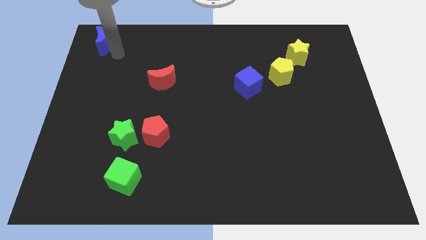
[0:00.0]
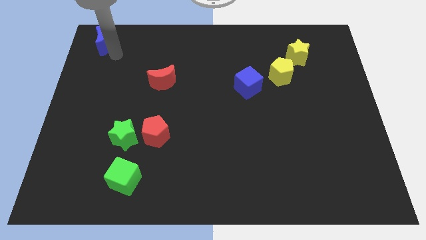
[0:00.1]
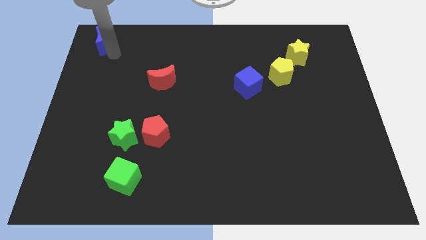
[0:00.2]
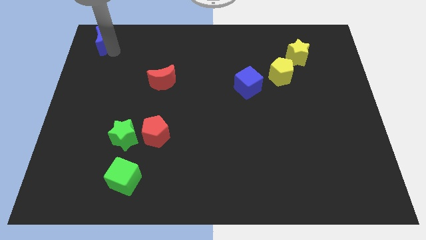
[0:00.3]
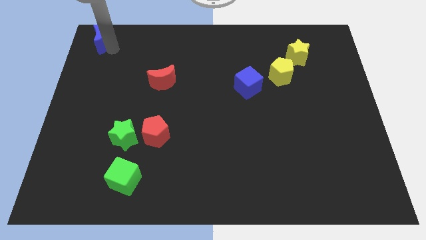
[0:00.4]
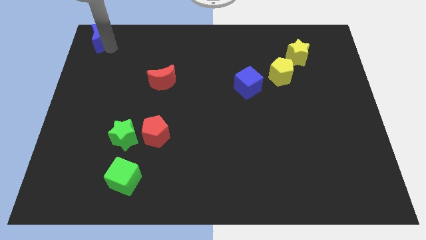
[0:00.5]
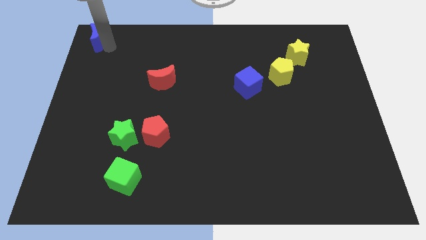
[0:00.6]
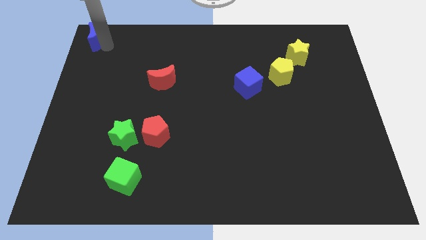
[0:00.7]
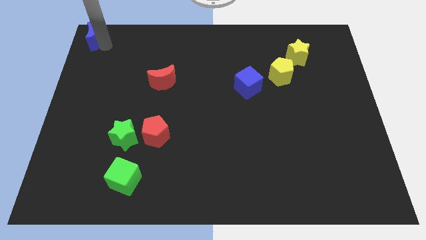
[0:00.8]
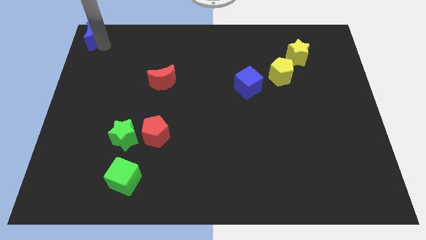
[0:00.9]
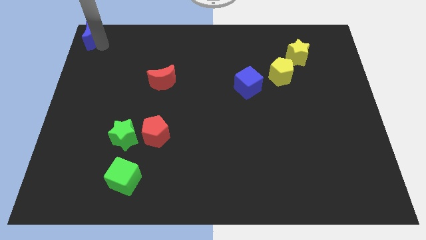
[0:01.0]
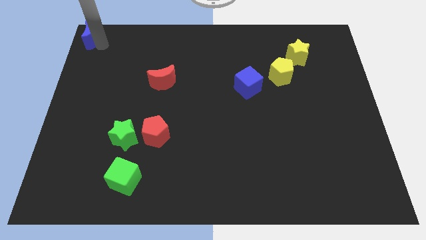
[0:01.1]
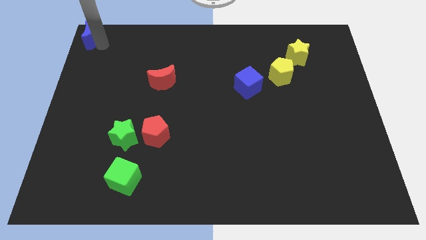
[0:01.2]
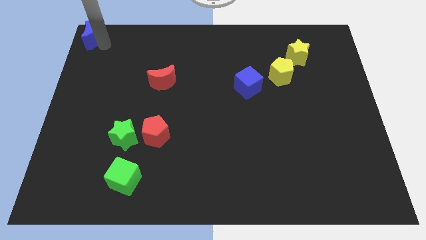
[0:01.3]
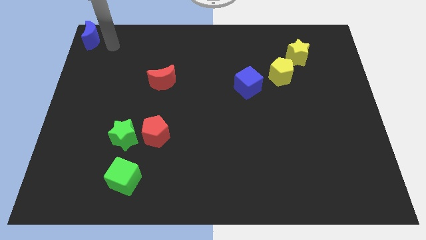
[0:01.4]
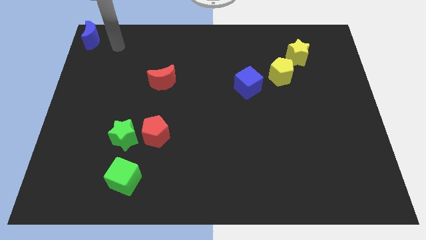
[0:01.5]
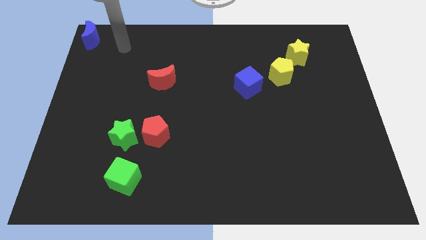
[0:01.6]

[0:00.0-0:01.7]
put the blue crescent to the top left corner of the board

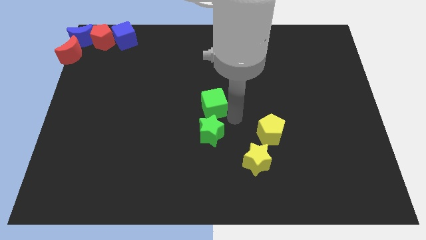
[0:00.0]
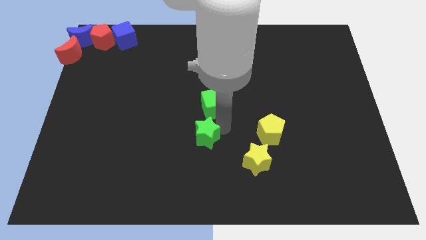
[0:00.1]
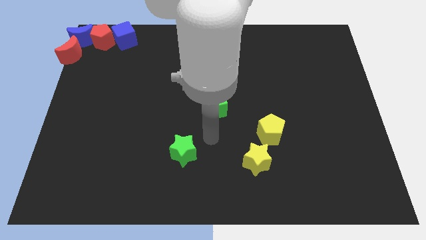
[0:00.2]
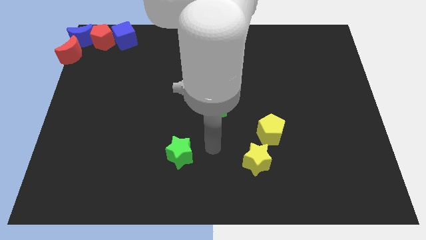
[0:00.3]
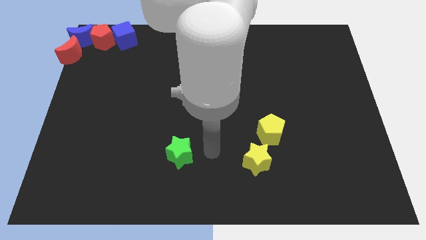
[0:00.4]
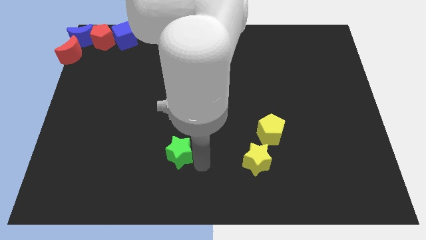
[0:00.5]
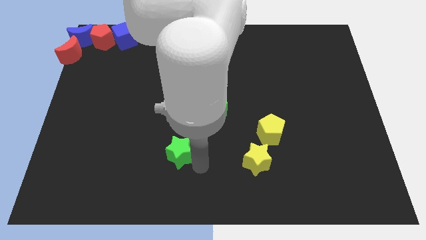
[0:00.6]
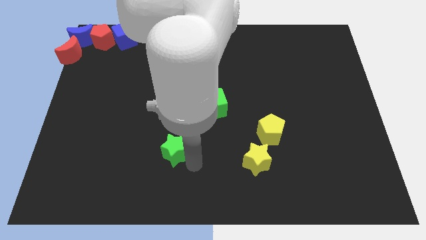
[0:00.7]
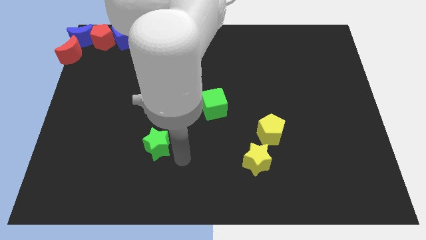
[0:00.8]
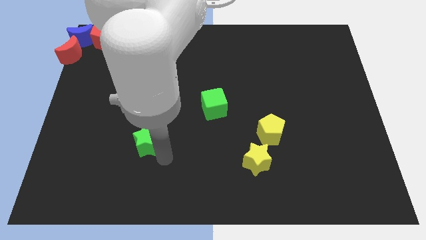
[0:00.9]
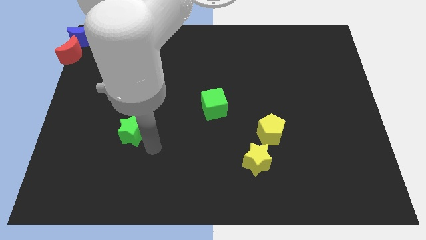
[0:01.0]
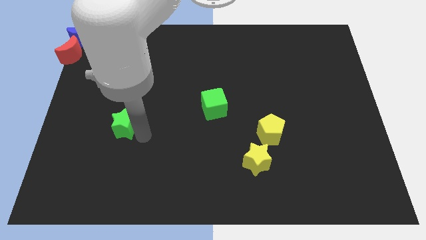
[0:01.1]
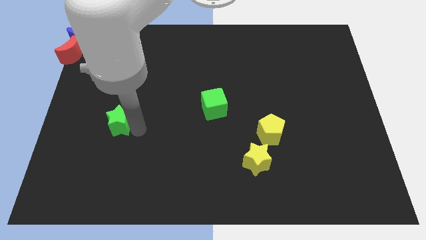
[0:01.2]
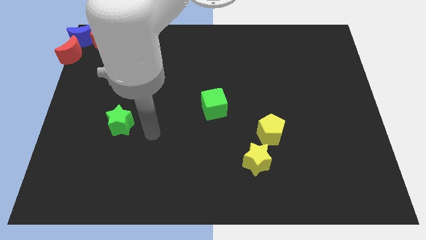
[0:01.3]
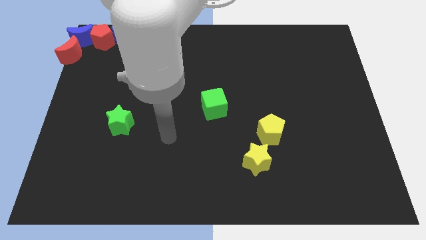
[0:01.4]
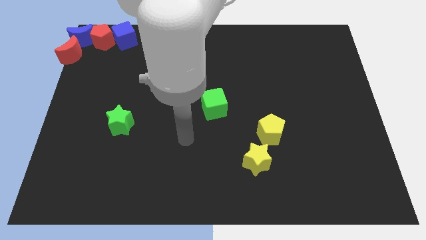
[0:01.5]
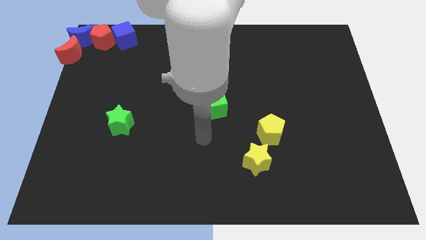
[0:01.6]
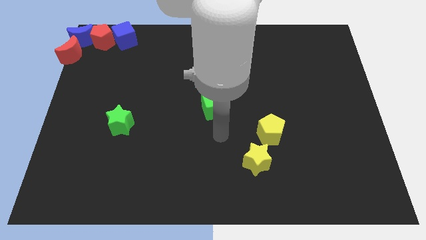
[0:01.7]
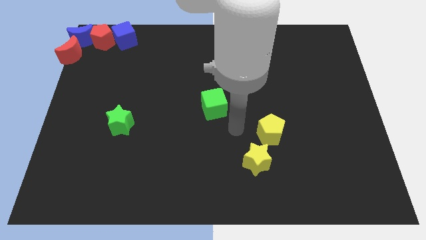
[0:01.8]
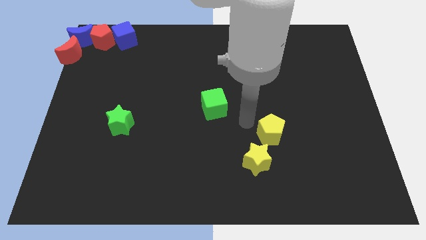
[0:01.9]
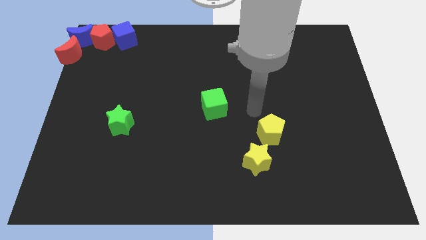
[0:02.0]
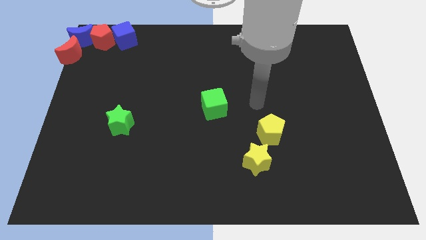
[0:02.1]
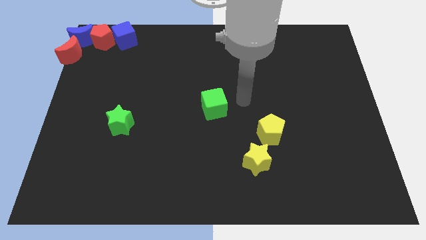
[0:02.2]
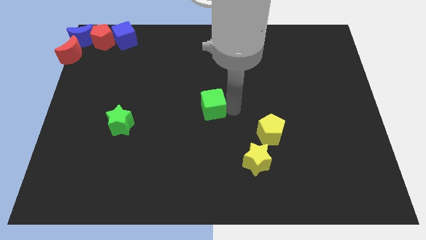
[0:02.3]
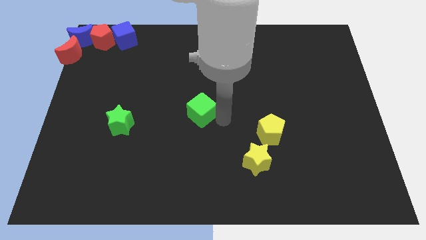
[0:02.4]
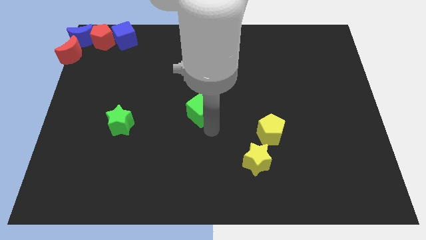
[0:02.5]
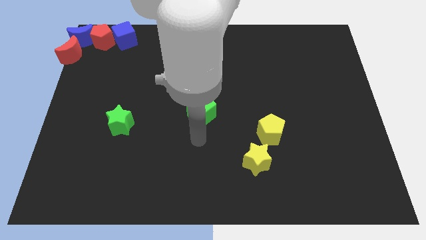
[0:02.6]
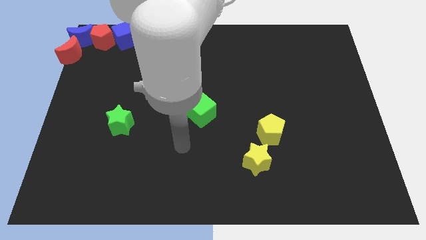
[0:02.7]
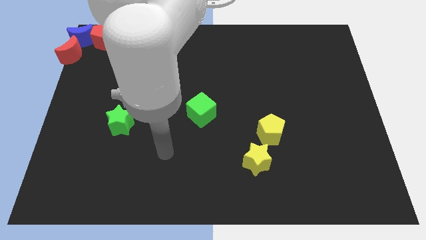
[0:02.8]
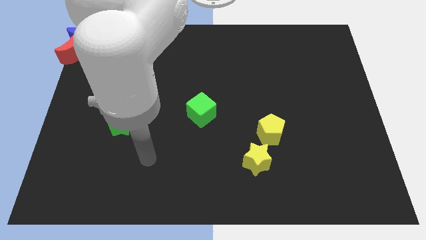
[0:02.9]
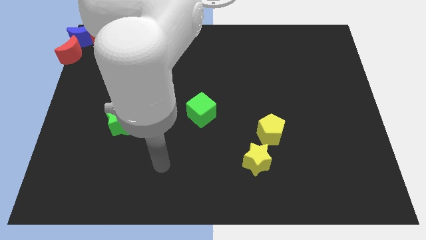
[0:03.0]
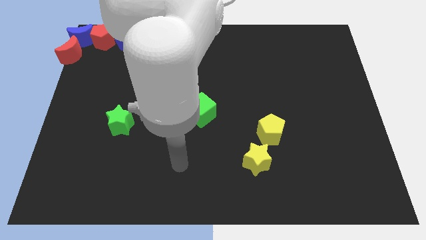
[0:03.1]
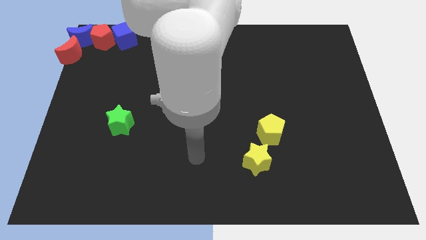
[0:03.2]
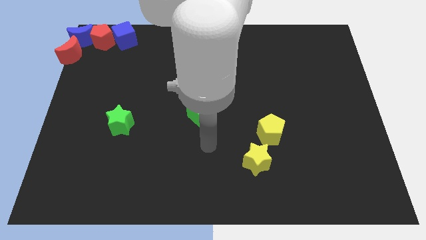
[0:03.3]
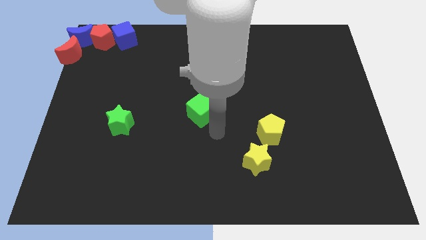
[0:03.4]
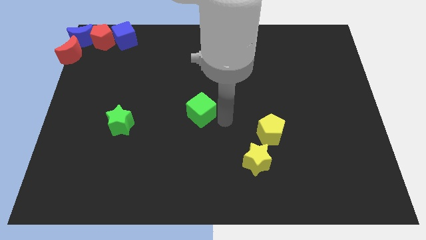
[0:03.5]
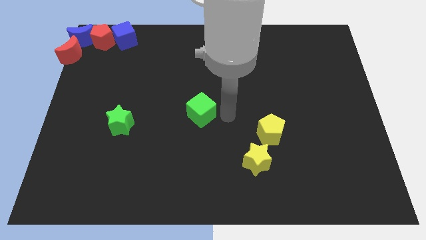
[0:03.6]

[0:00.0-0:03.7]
move the green star left to the green cube

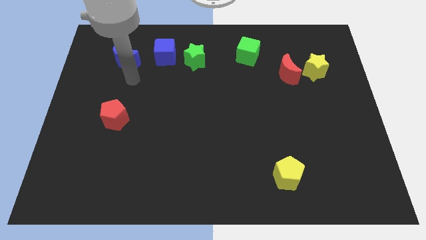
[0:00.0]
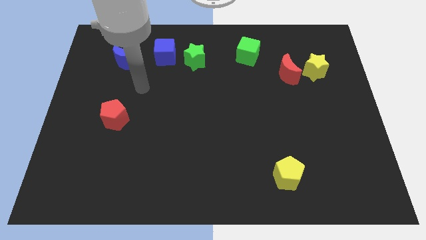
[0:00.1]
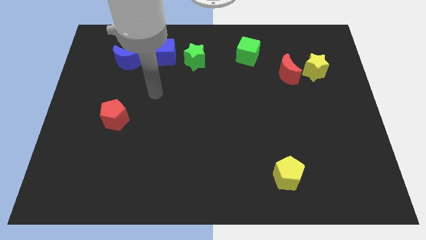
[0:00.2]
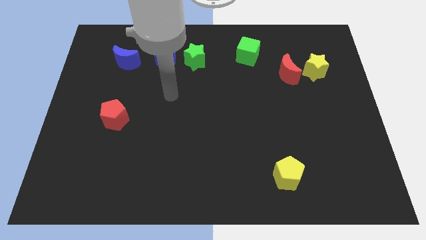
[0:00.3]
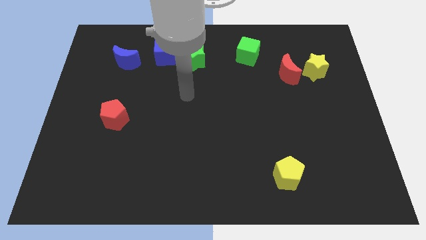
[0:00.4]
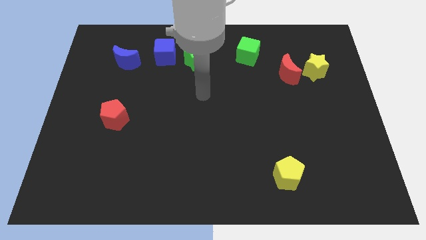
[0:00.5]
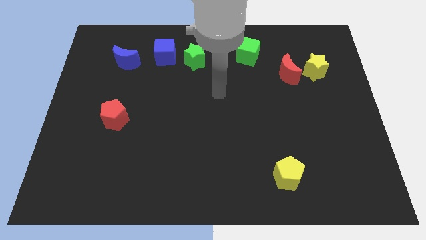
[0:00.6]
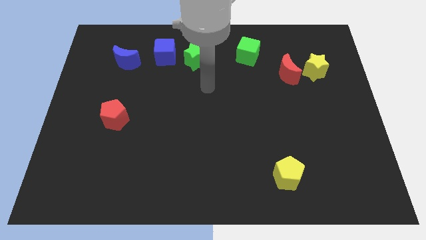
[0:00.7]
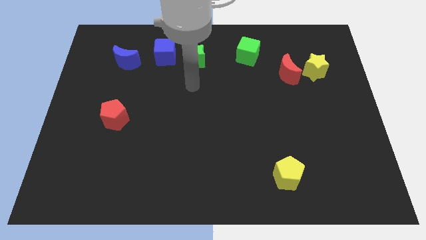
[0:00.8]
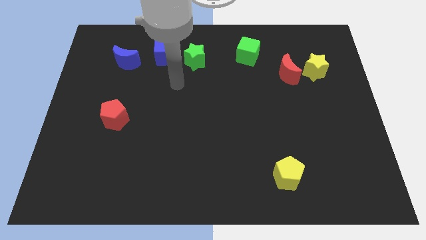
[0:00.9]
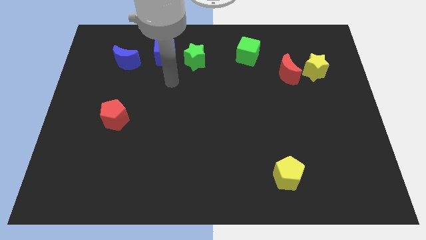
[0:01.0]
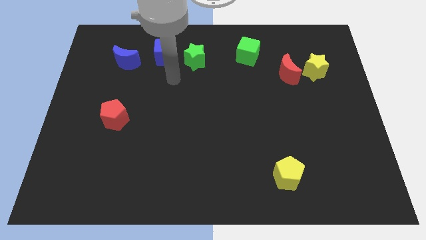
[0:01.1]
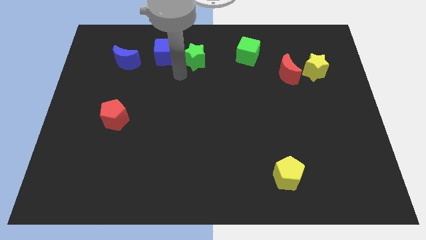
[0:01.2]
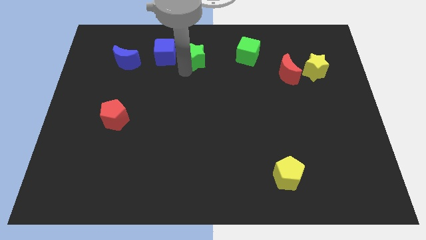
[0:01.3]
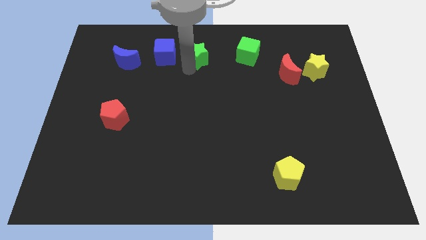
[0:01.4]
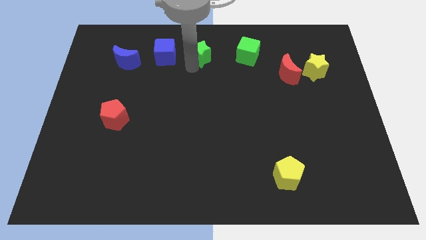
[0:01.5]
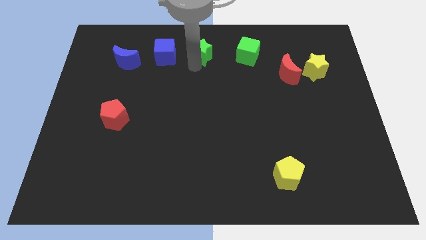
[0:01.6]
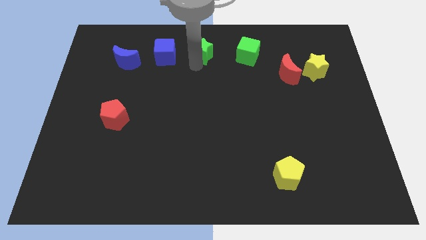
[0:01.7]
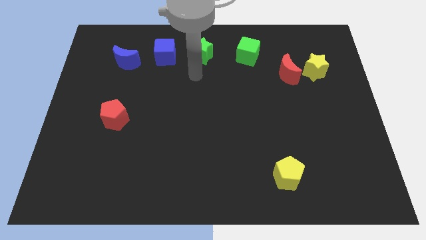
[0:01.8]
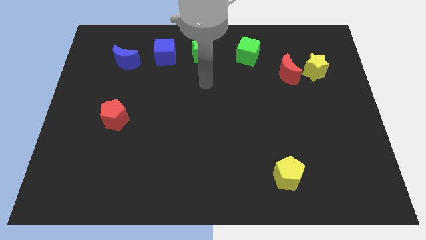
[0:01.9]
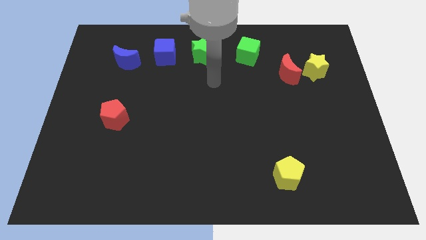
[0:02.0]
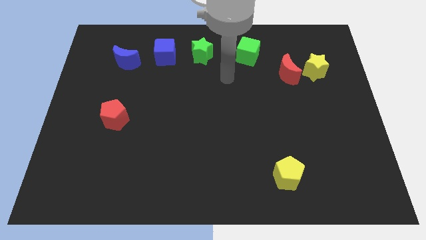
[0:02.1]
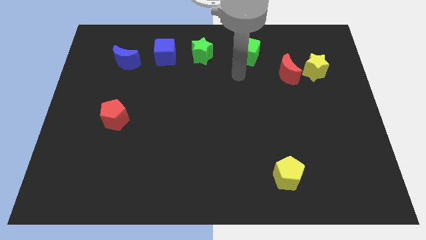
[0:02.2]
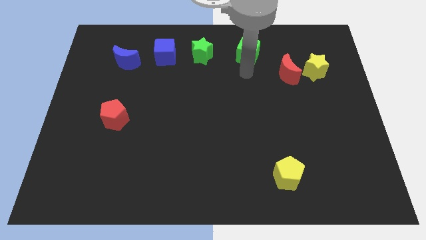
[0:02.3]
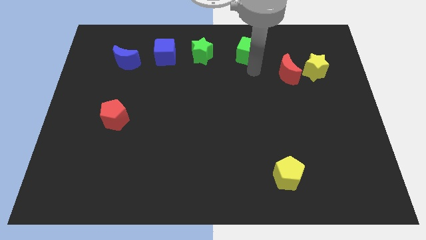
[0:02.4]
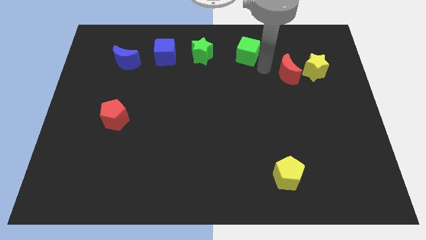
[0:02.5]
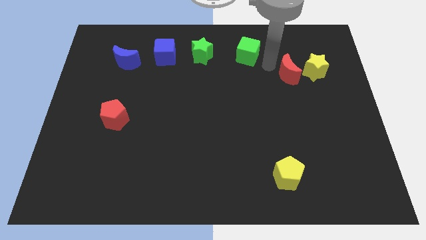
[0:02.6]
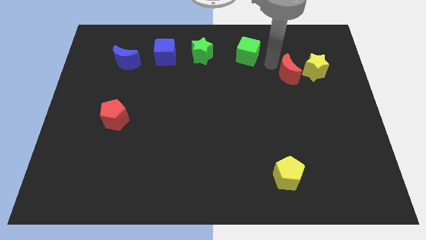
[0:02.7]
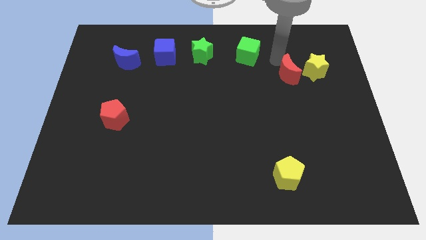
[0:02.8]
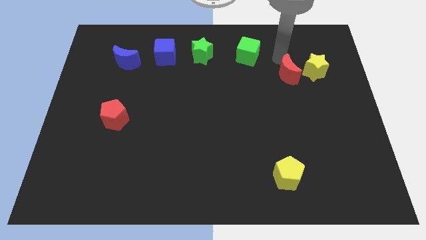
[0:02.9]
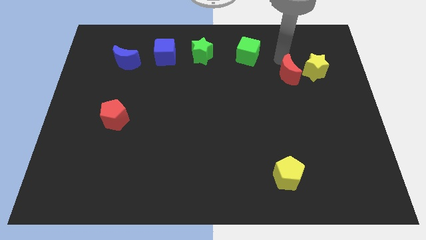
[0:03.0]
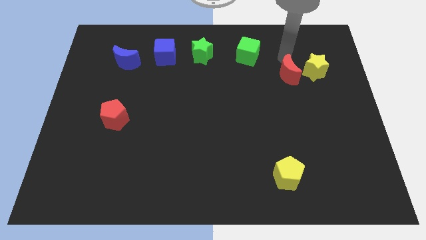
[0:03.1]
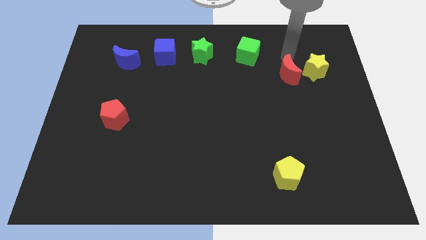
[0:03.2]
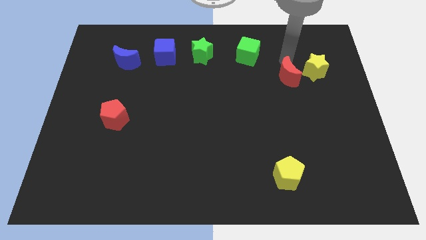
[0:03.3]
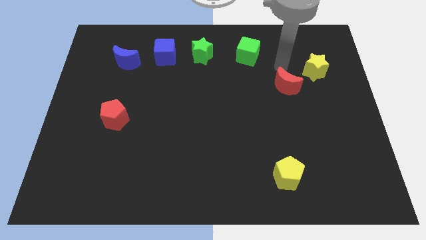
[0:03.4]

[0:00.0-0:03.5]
move green star in between green cube and blue cube

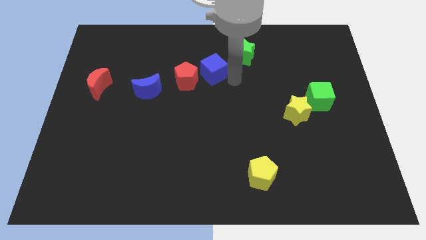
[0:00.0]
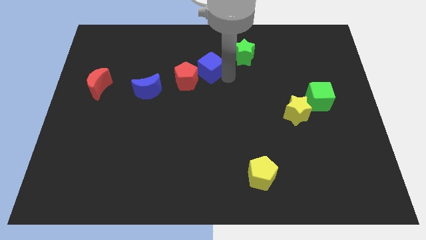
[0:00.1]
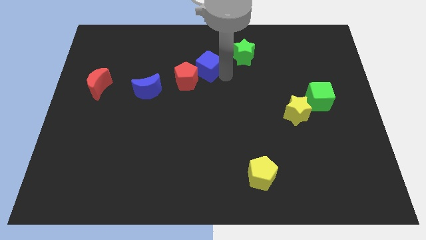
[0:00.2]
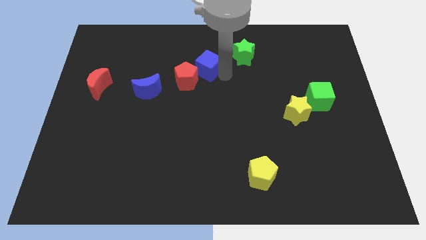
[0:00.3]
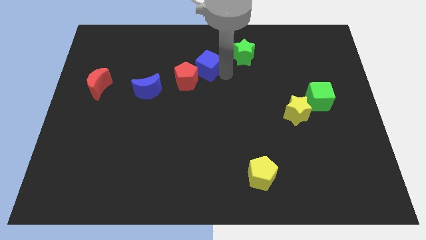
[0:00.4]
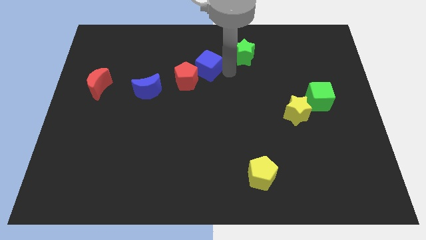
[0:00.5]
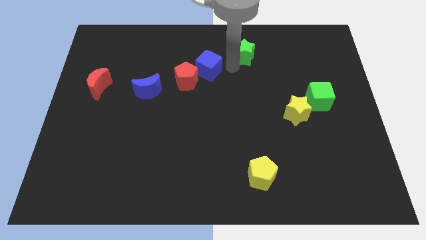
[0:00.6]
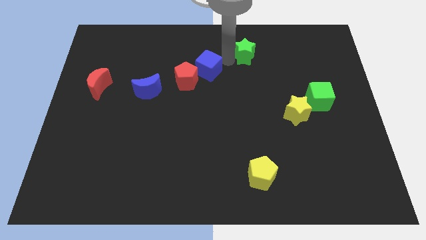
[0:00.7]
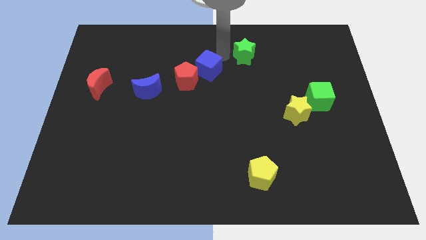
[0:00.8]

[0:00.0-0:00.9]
separate green star from blue cube
